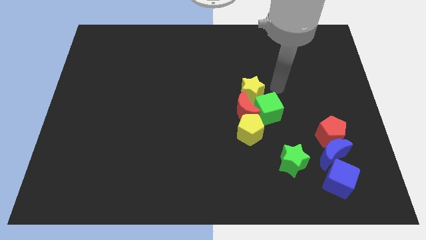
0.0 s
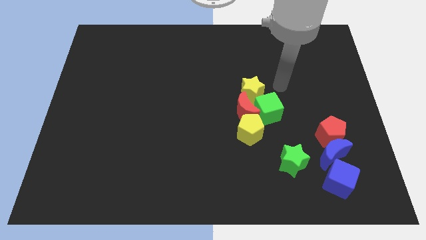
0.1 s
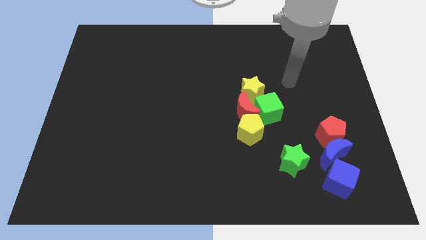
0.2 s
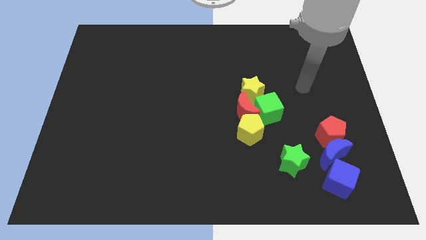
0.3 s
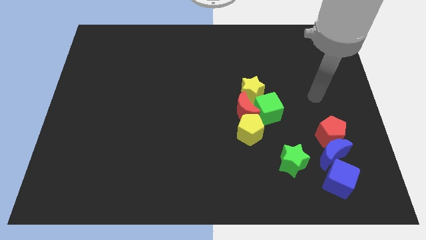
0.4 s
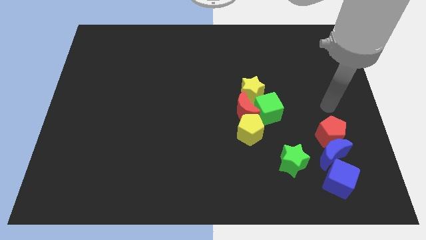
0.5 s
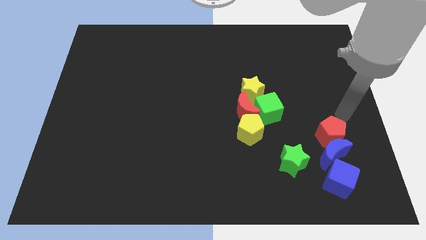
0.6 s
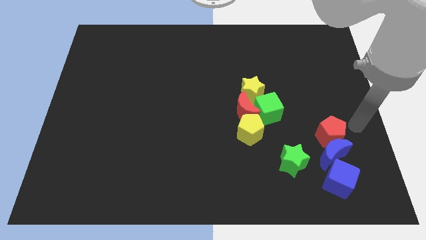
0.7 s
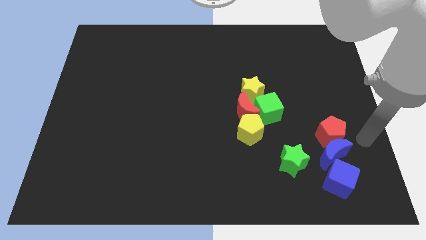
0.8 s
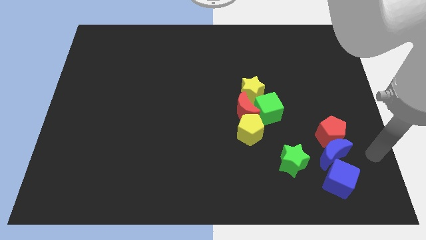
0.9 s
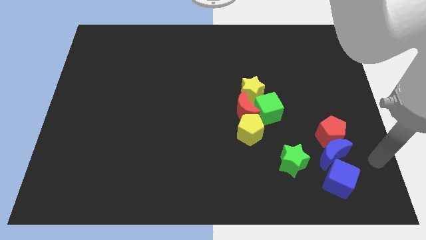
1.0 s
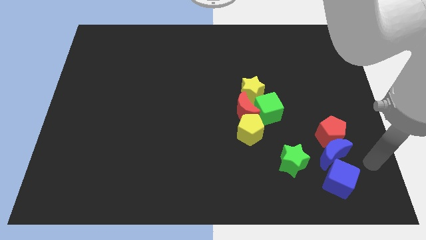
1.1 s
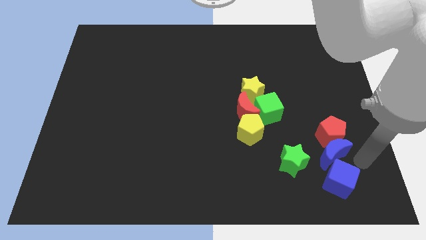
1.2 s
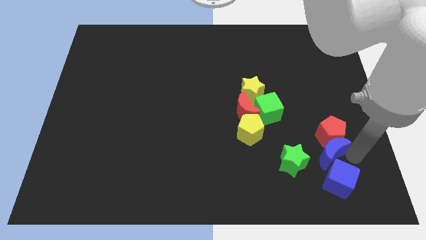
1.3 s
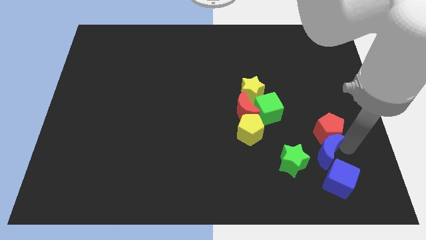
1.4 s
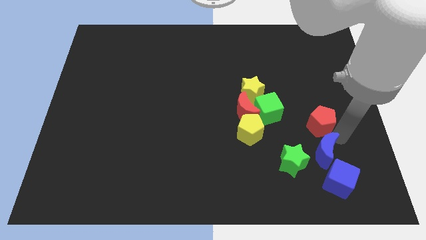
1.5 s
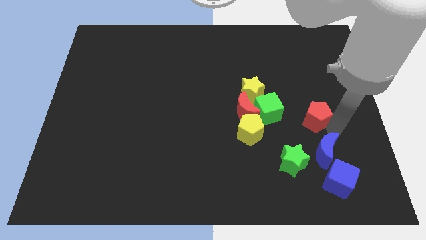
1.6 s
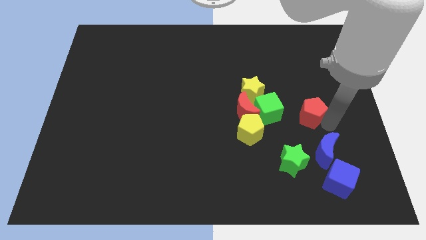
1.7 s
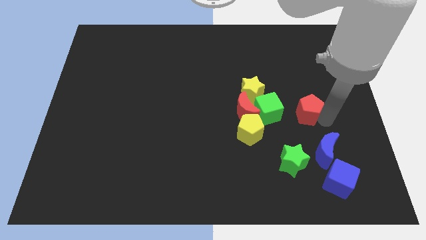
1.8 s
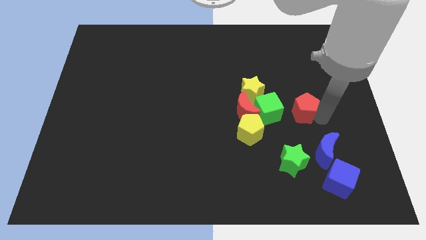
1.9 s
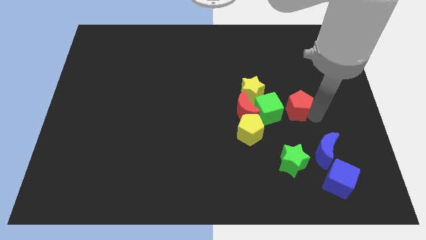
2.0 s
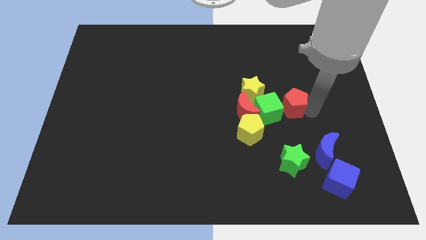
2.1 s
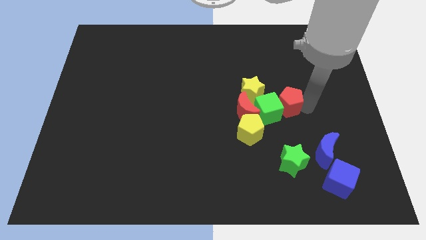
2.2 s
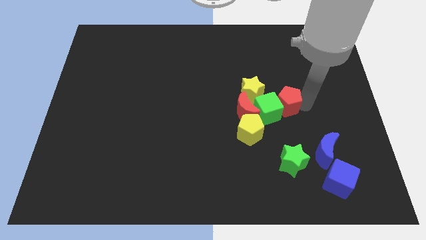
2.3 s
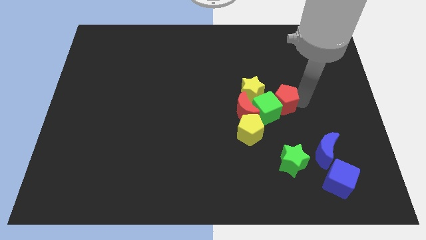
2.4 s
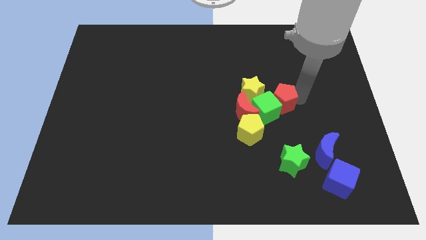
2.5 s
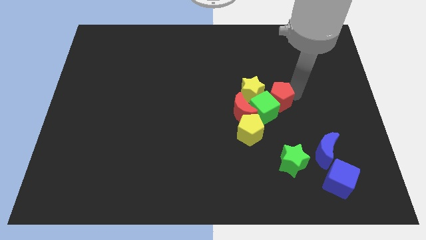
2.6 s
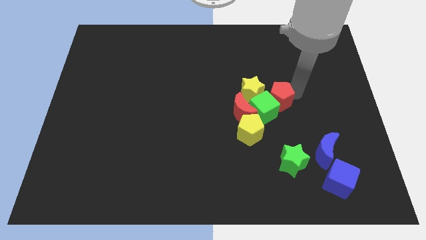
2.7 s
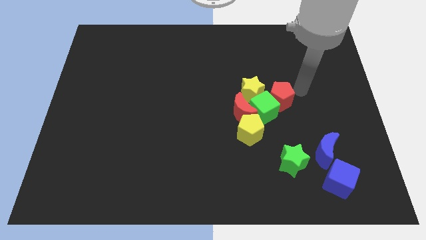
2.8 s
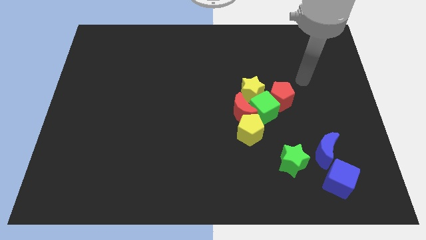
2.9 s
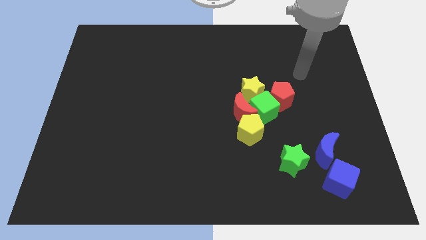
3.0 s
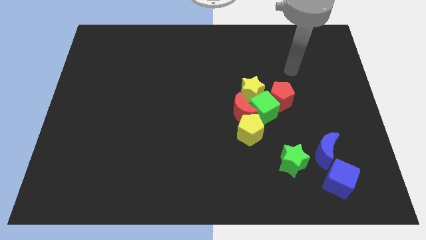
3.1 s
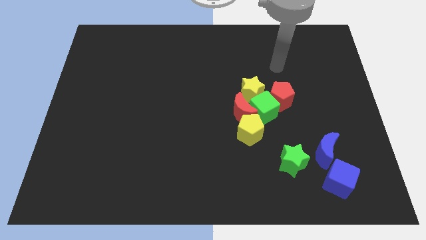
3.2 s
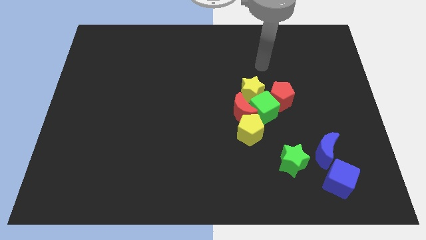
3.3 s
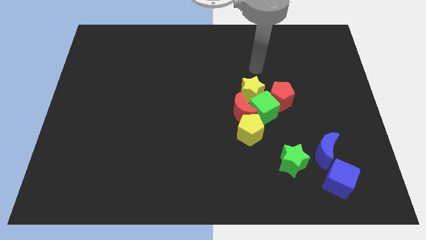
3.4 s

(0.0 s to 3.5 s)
move red pentagon to top right of the green cube

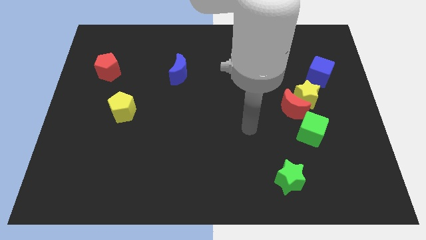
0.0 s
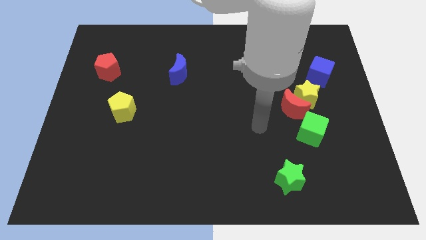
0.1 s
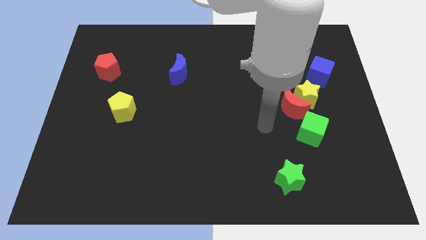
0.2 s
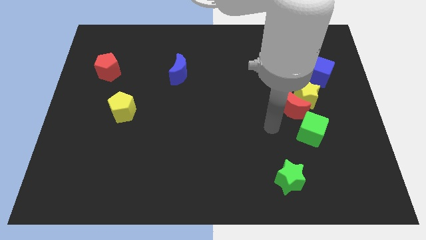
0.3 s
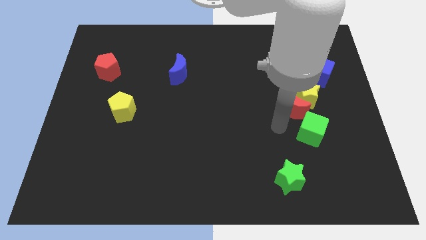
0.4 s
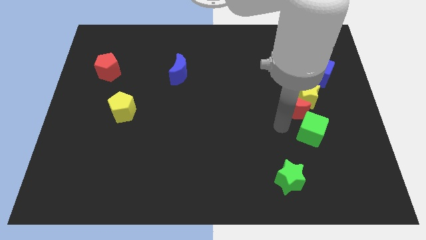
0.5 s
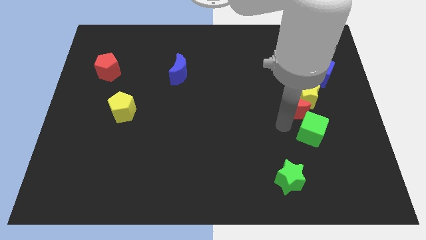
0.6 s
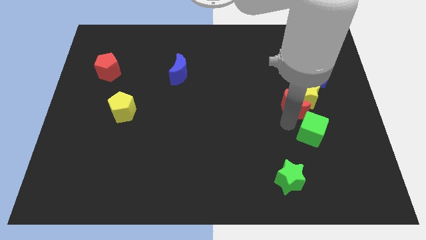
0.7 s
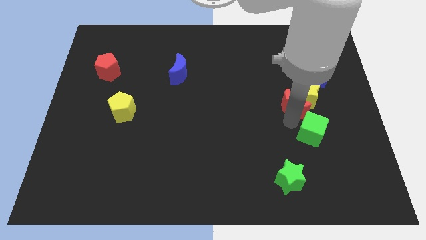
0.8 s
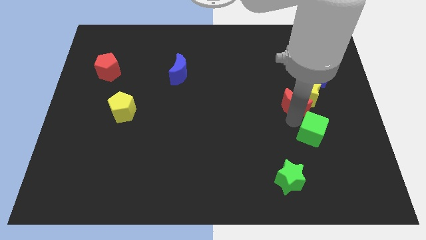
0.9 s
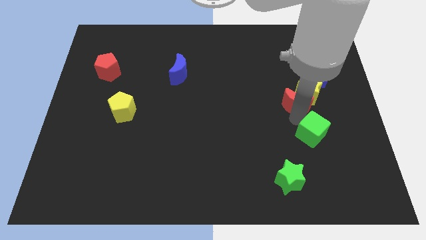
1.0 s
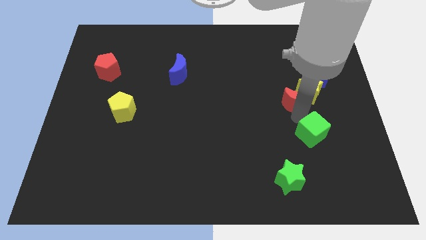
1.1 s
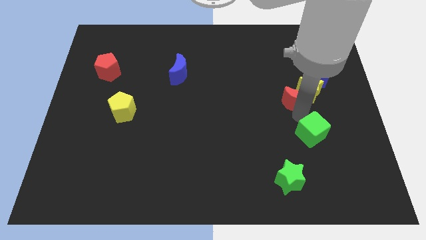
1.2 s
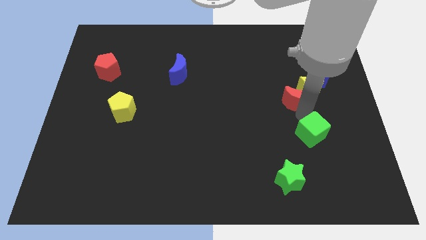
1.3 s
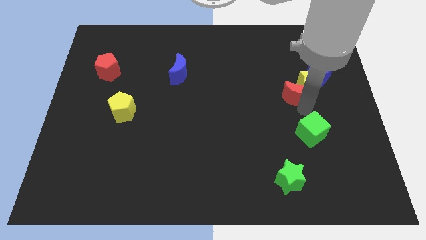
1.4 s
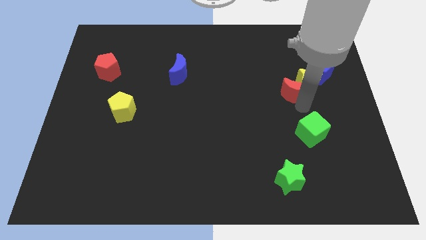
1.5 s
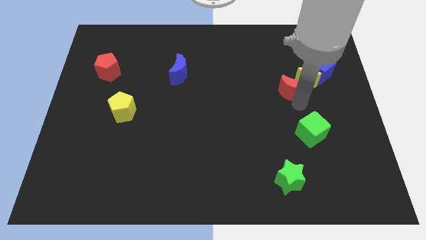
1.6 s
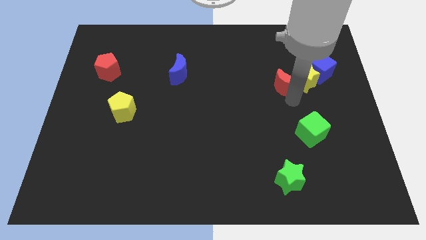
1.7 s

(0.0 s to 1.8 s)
separate the red moon from green cube

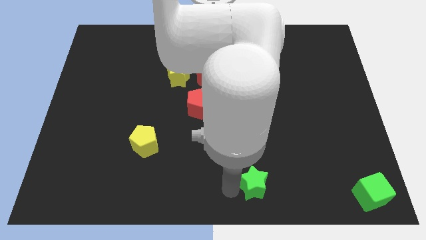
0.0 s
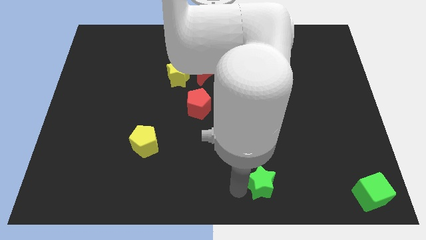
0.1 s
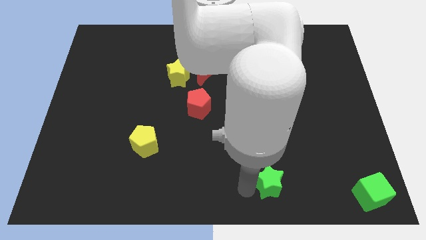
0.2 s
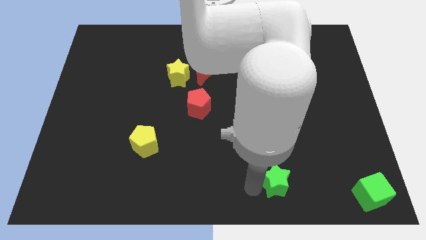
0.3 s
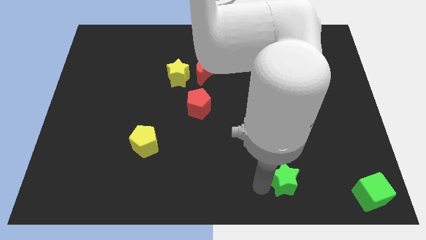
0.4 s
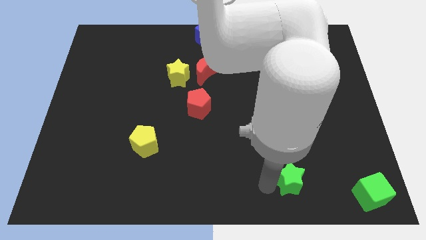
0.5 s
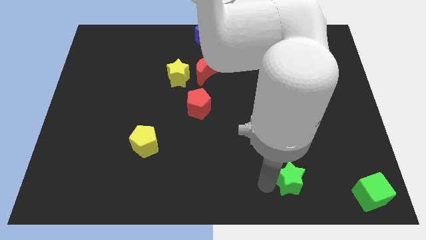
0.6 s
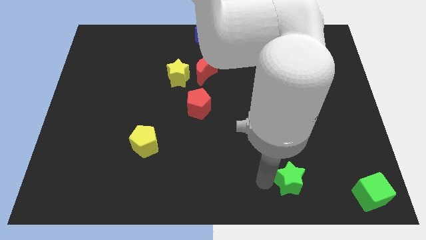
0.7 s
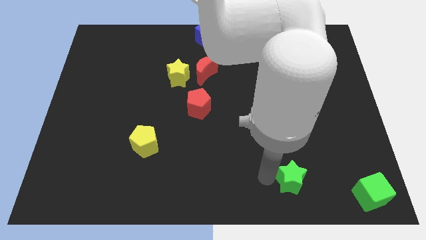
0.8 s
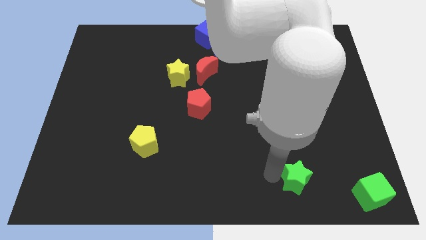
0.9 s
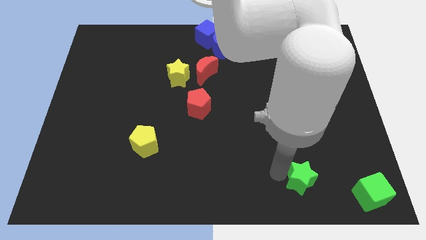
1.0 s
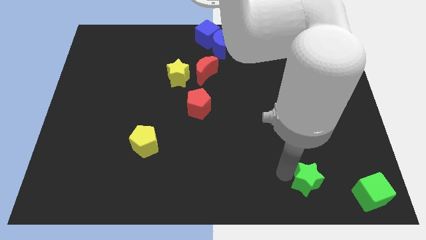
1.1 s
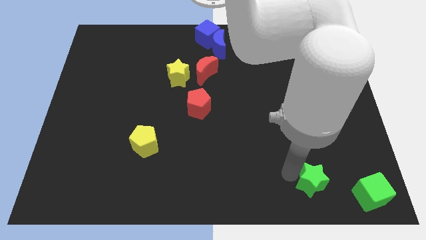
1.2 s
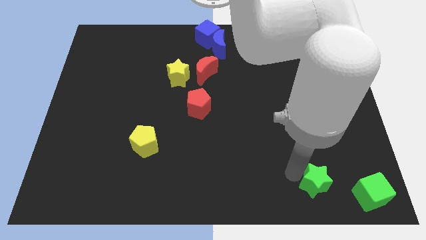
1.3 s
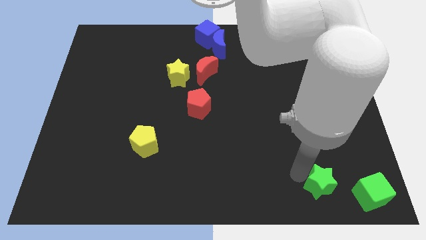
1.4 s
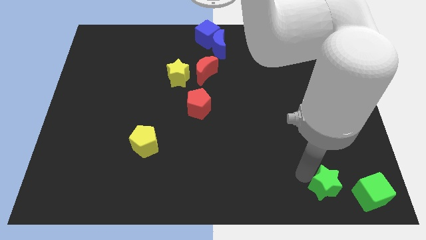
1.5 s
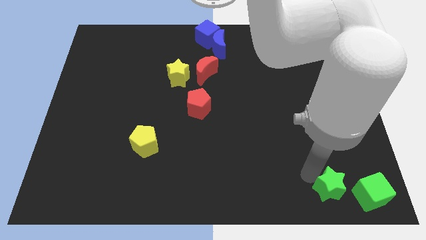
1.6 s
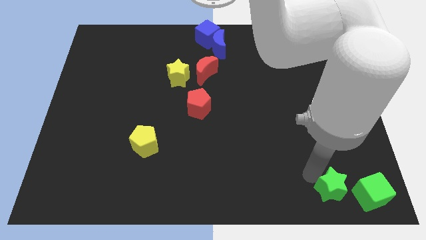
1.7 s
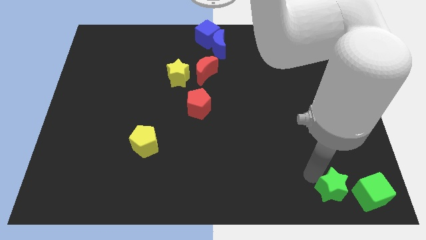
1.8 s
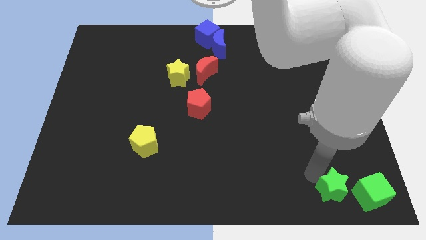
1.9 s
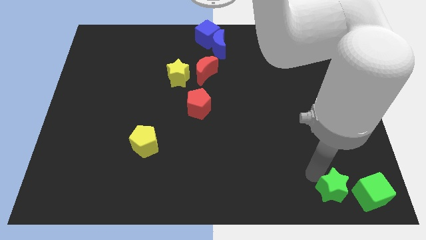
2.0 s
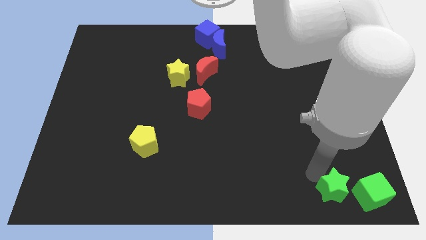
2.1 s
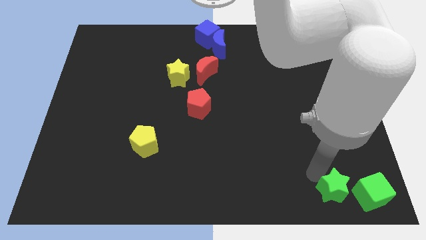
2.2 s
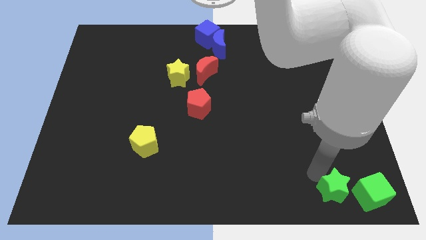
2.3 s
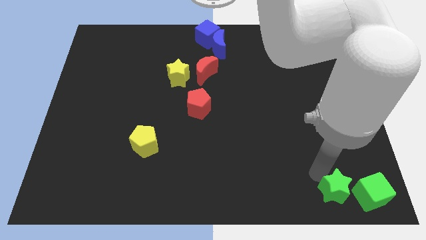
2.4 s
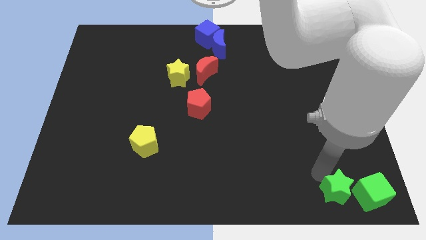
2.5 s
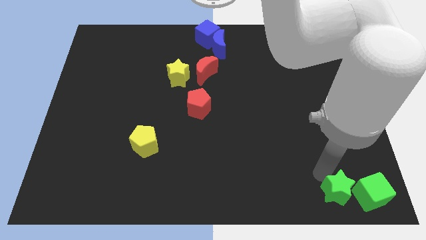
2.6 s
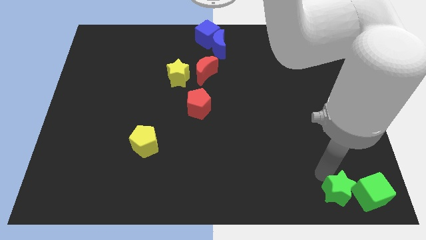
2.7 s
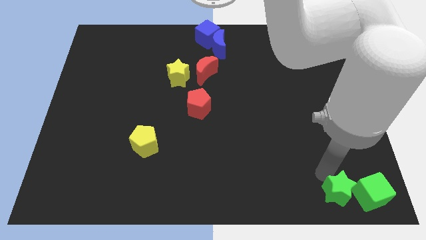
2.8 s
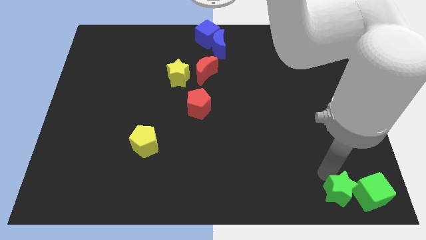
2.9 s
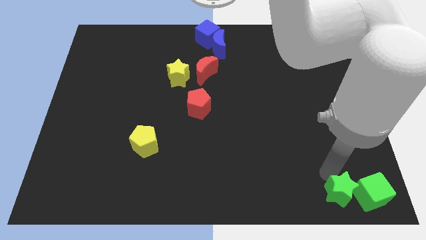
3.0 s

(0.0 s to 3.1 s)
place the green star left to the green cube

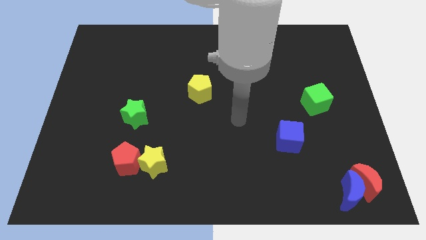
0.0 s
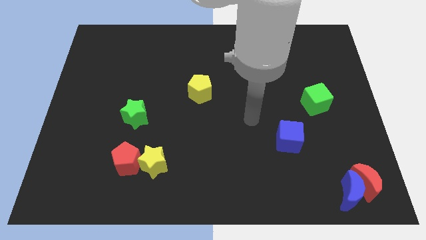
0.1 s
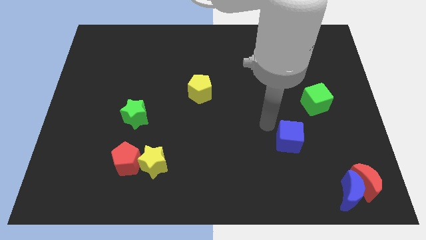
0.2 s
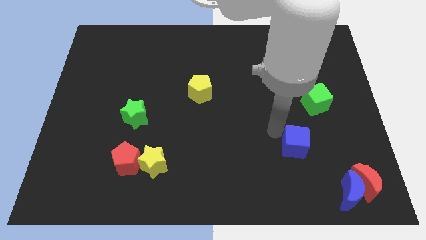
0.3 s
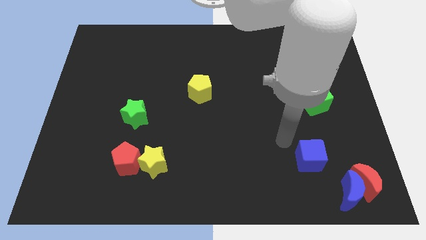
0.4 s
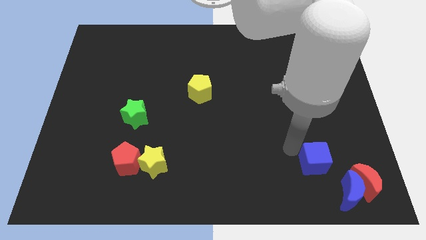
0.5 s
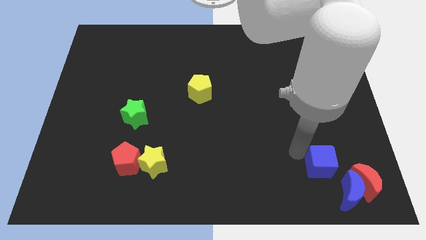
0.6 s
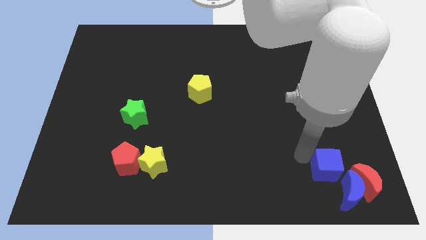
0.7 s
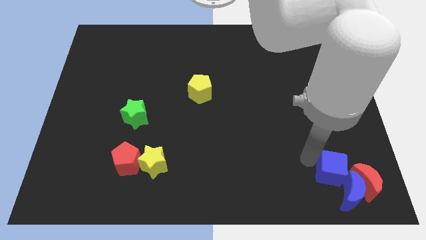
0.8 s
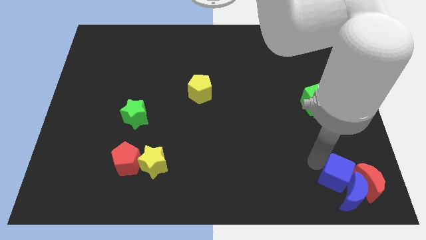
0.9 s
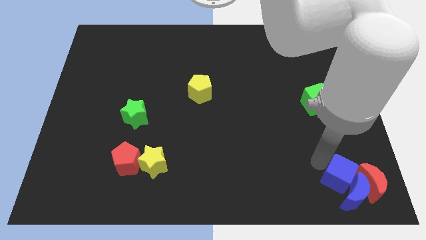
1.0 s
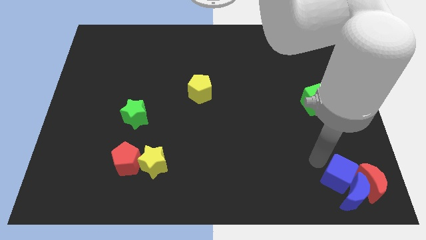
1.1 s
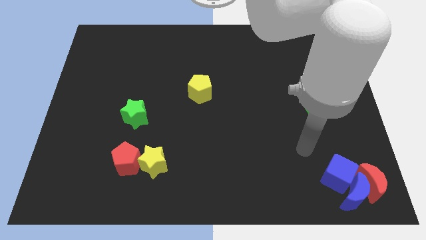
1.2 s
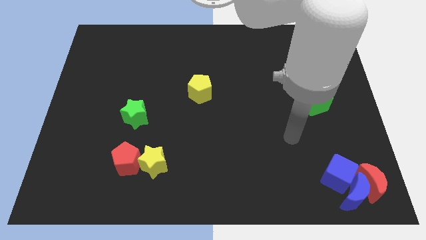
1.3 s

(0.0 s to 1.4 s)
place the blue cube to the blue moon
